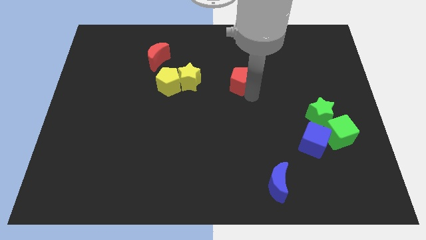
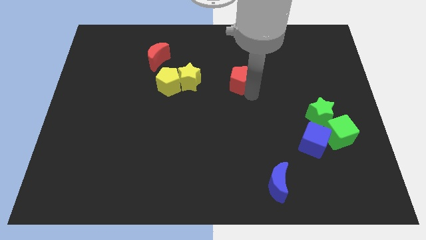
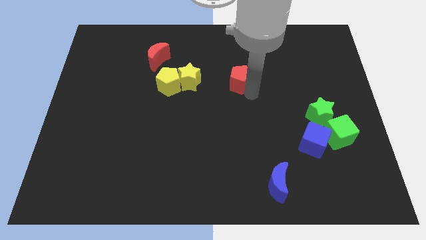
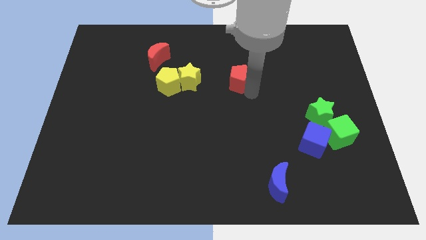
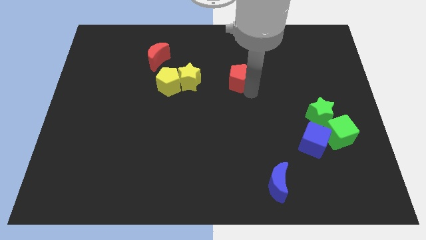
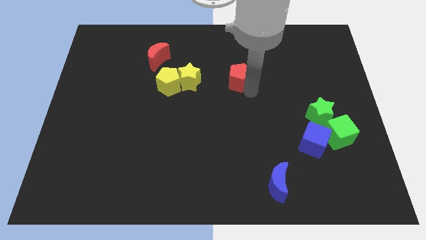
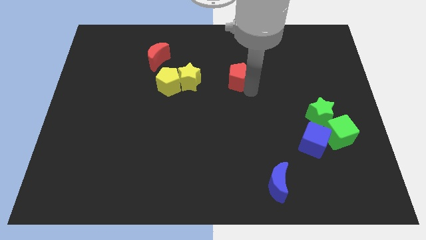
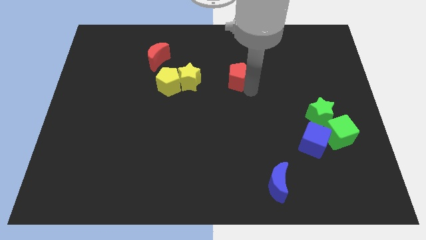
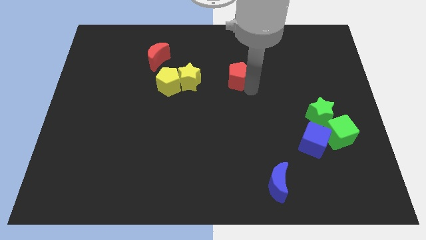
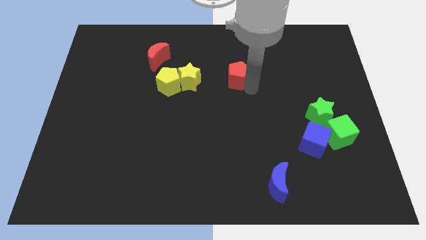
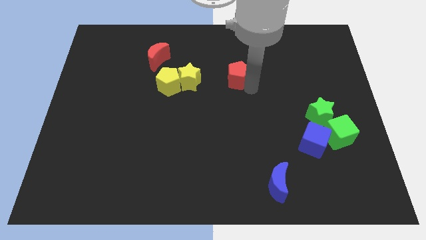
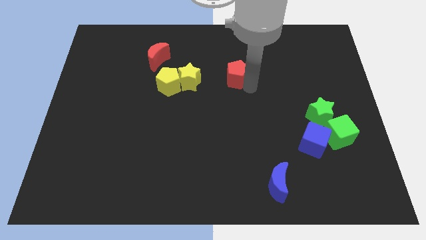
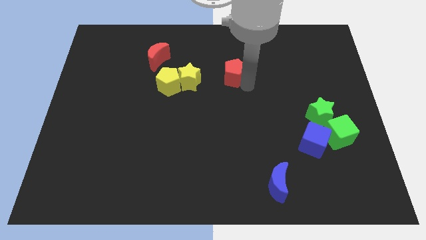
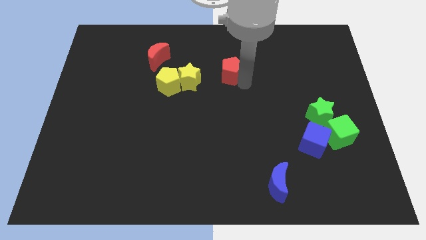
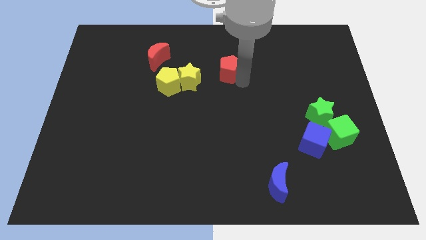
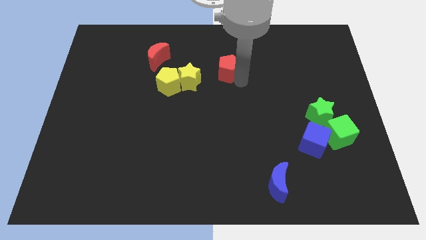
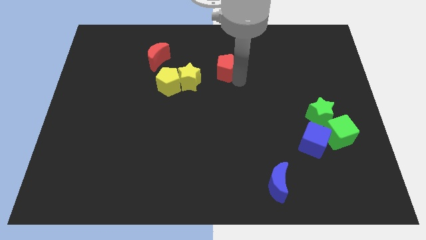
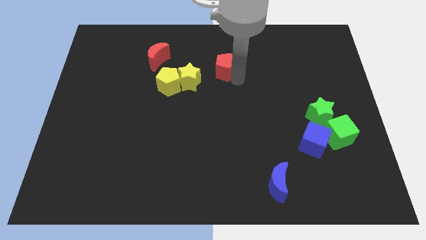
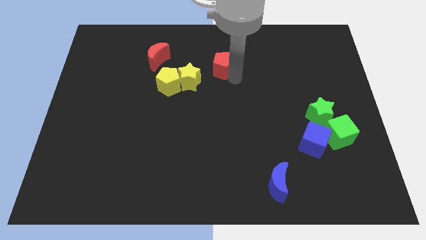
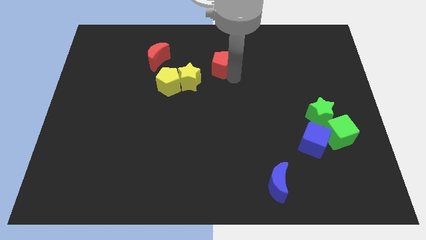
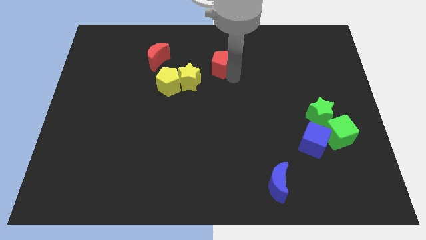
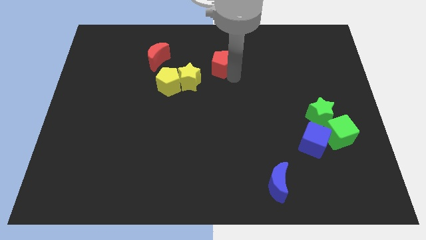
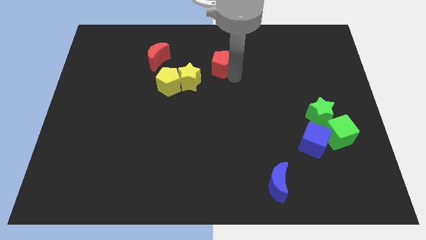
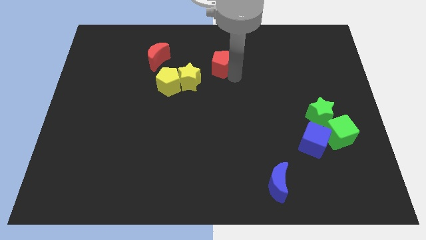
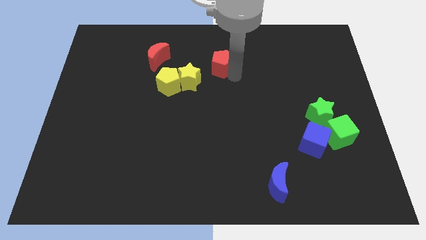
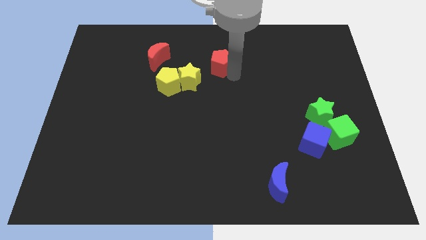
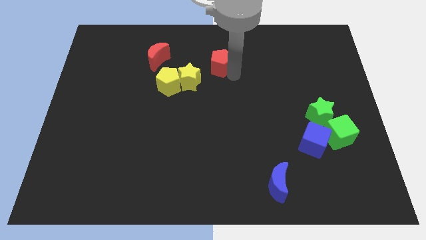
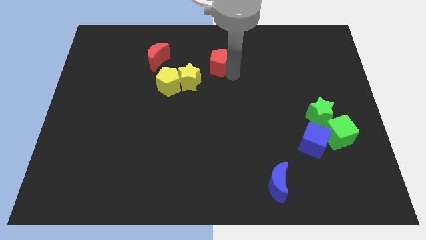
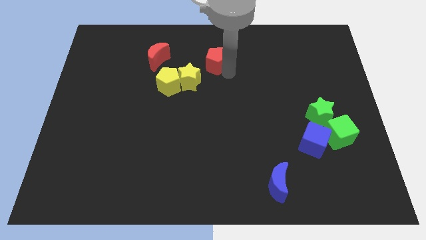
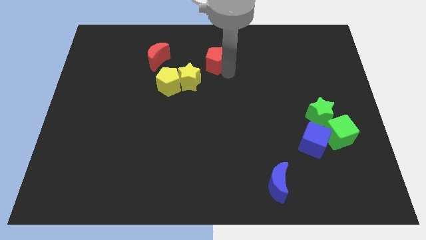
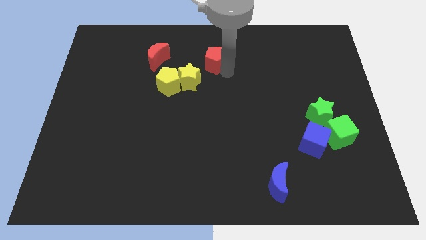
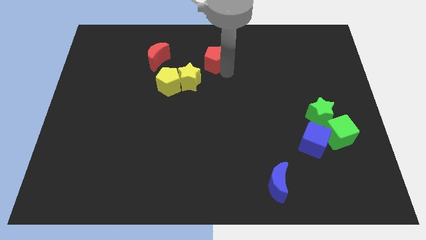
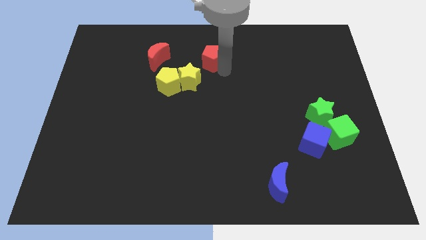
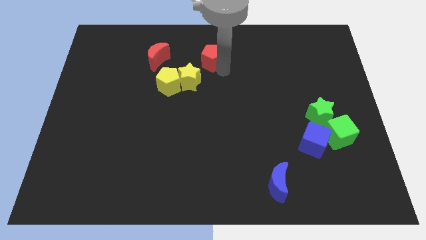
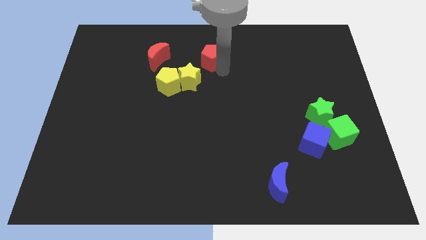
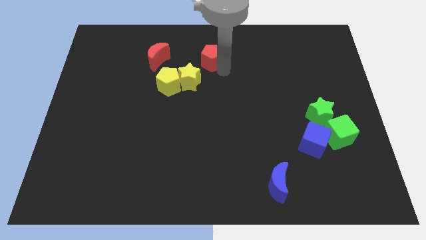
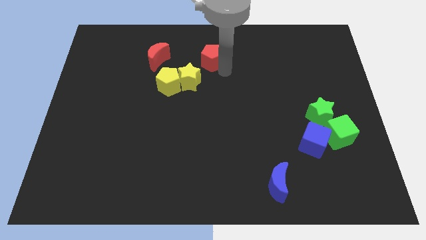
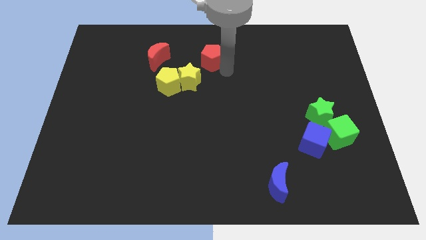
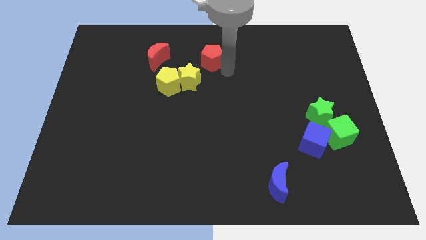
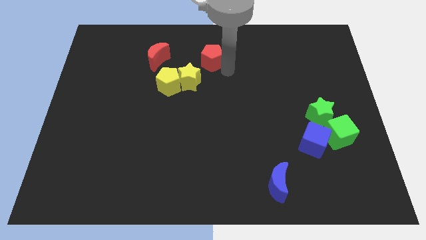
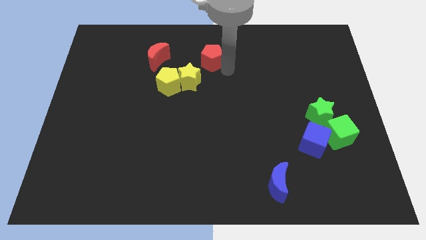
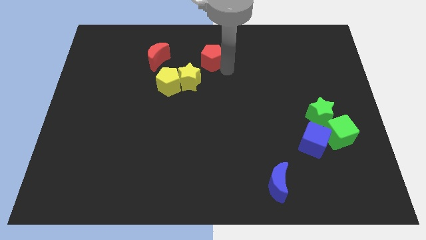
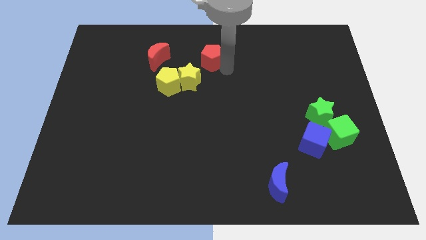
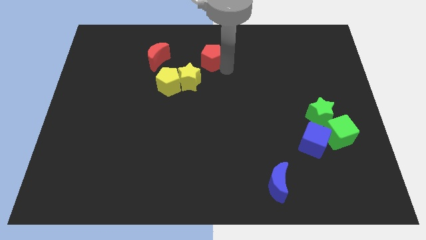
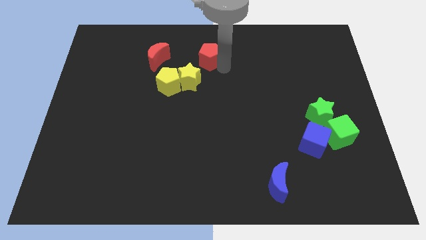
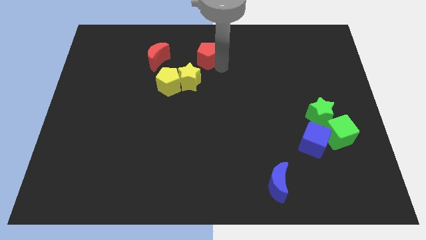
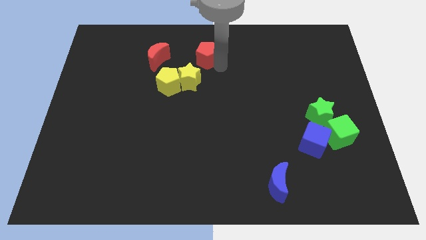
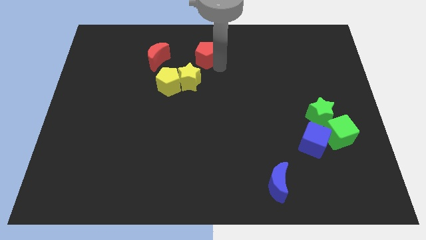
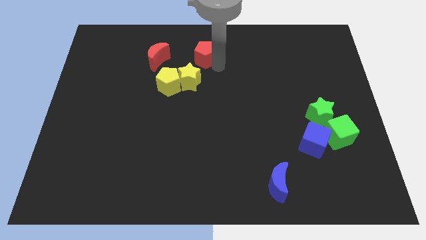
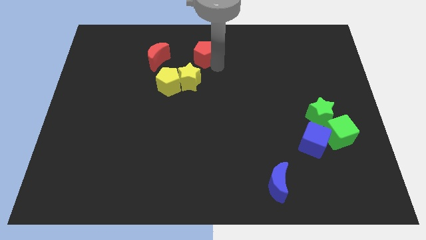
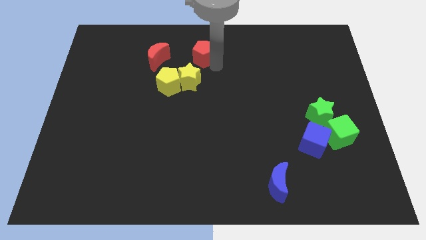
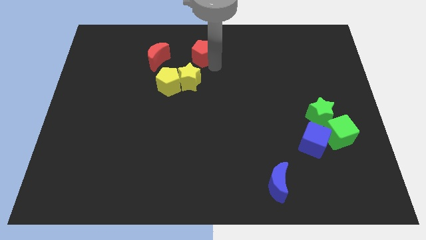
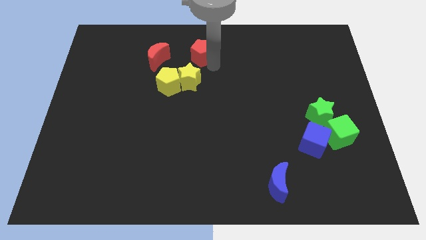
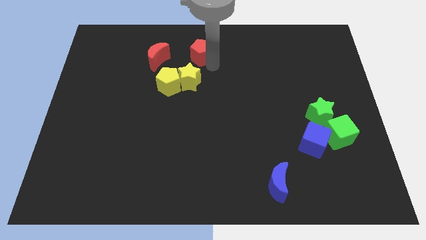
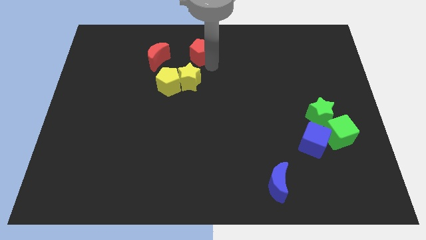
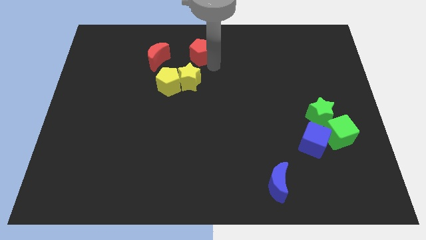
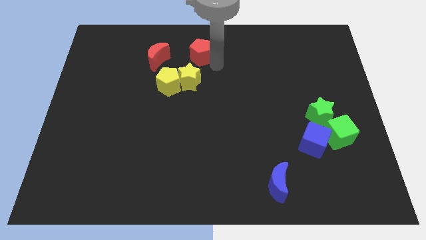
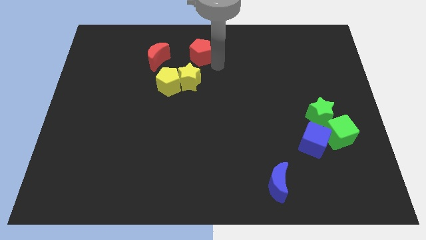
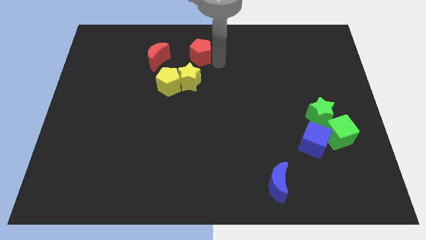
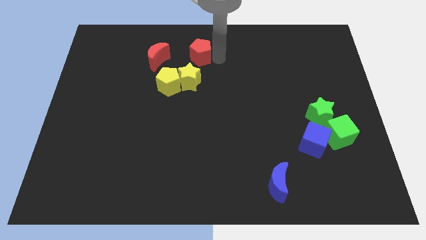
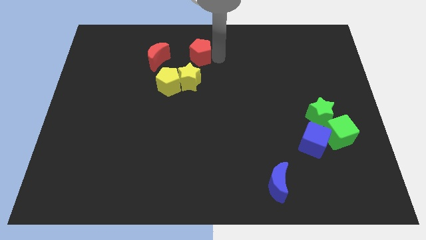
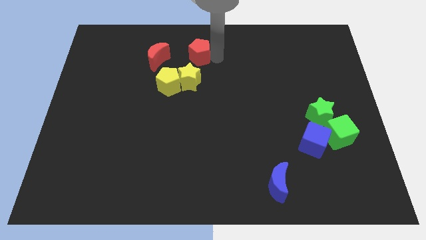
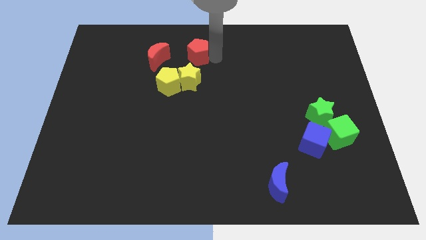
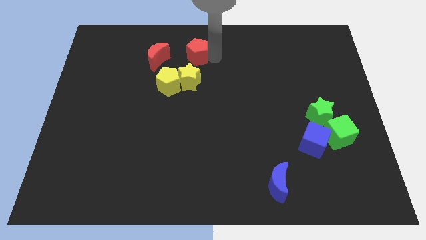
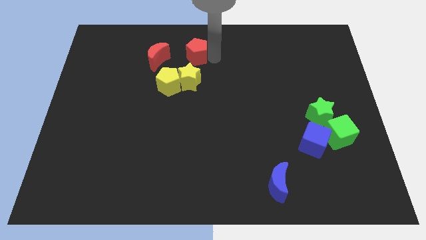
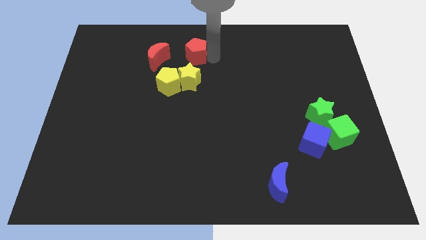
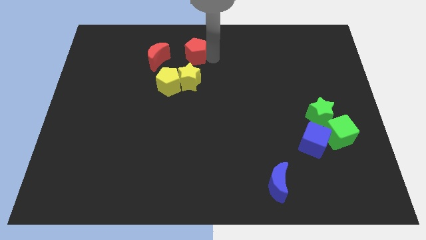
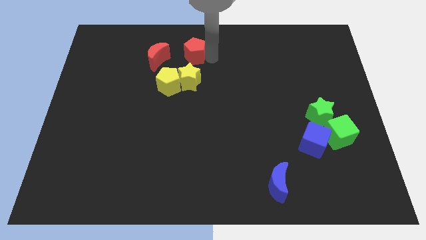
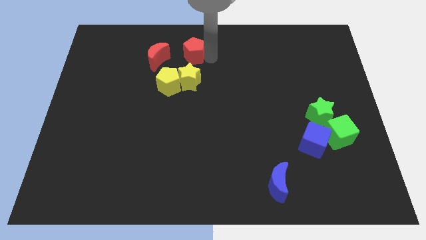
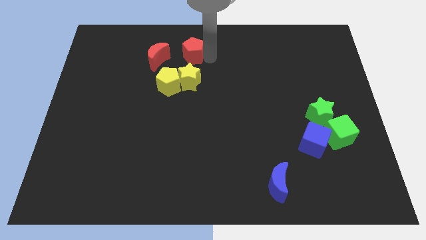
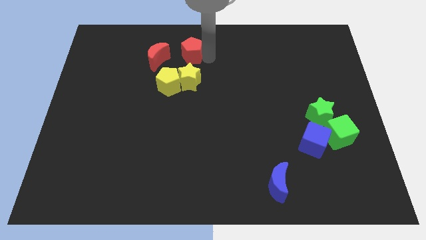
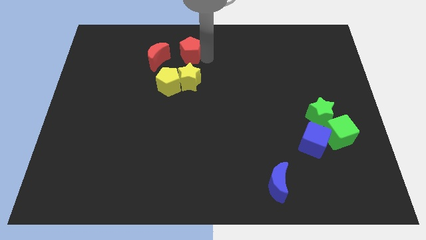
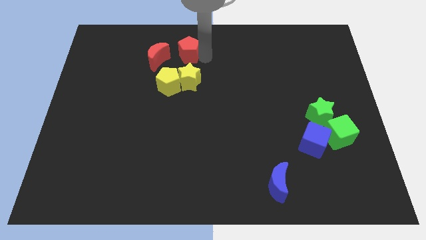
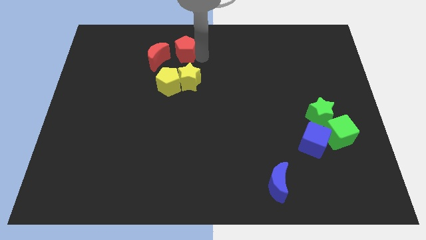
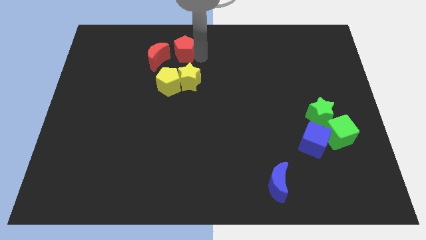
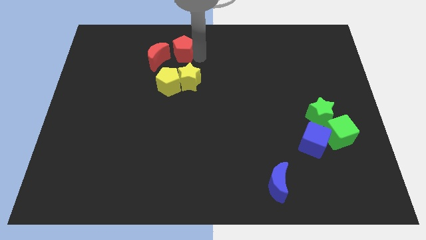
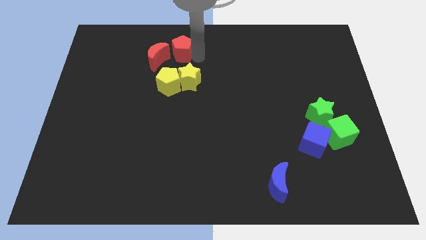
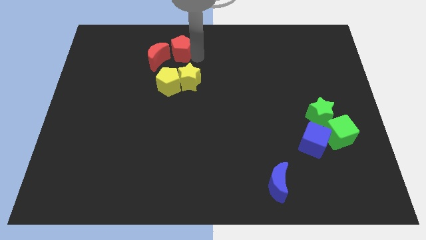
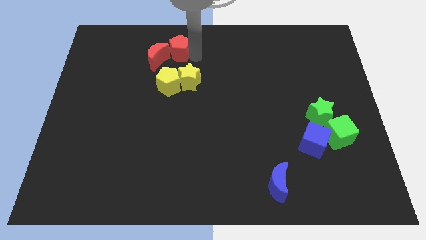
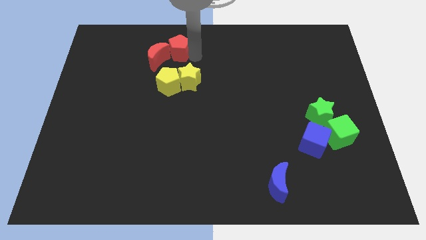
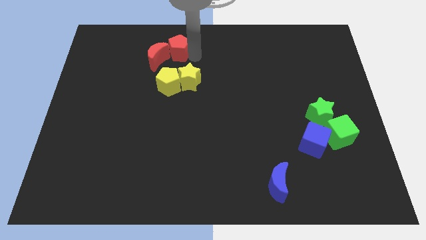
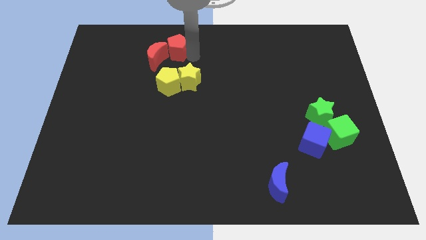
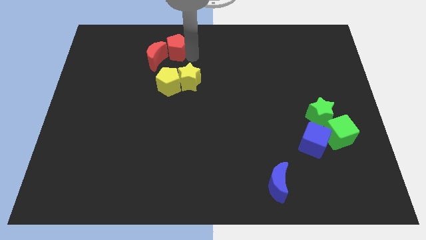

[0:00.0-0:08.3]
push the red pentagon to the right of the red crescent

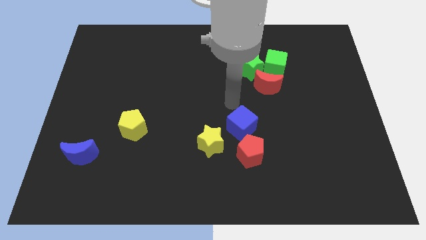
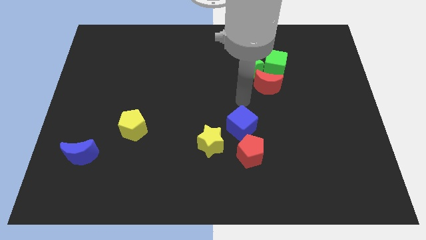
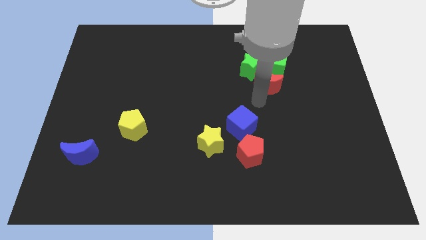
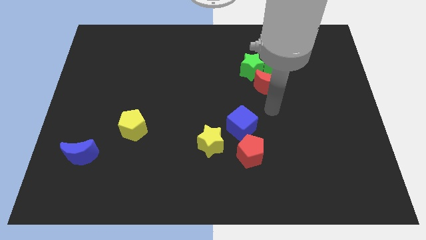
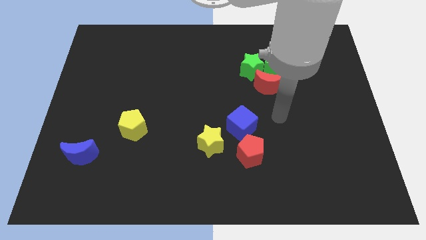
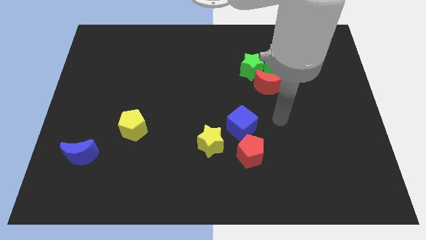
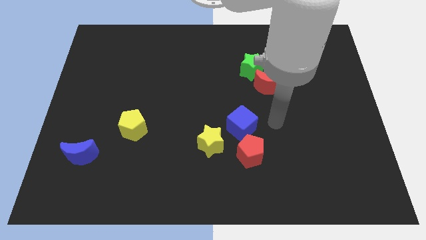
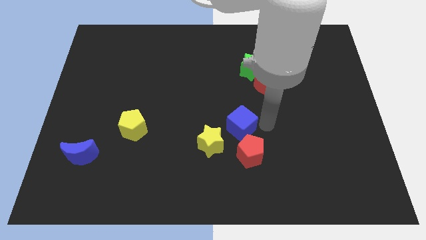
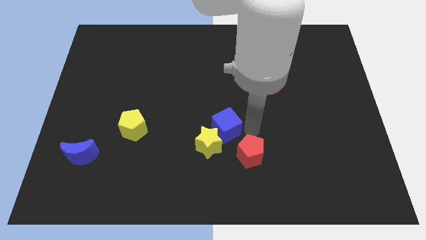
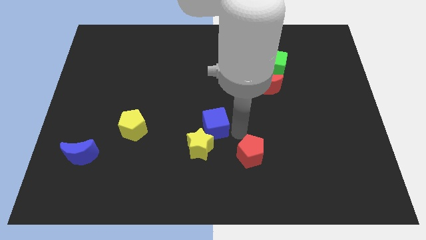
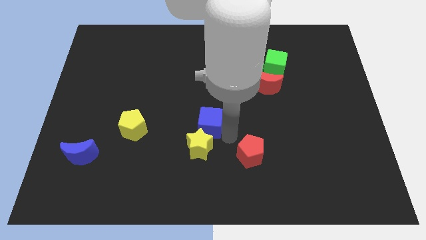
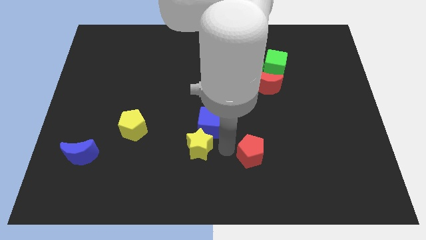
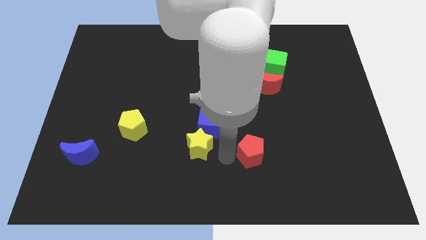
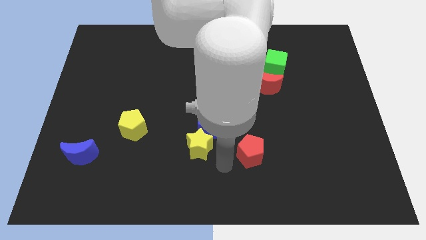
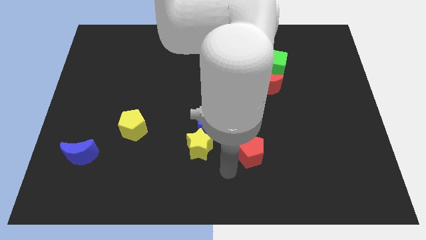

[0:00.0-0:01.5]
push the blue cube towards the yellow star
